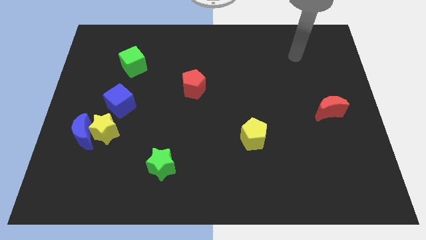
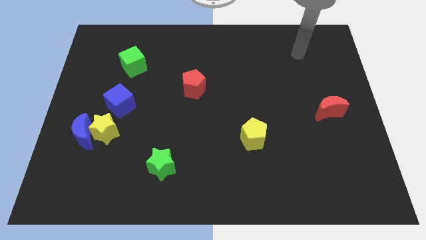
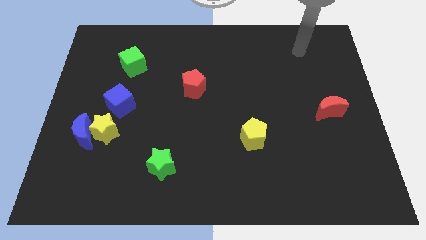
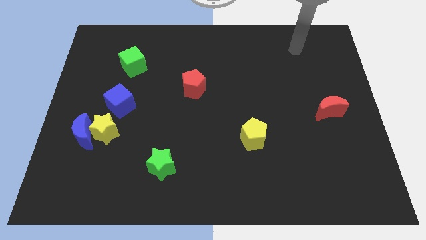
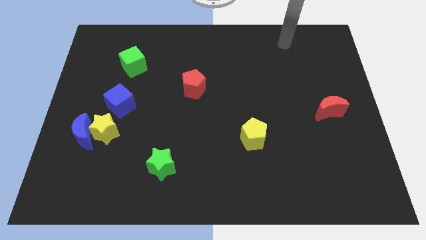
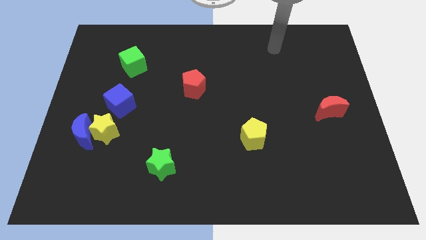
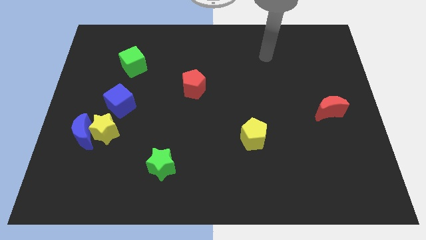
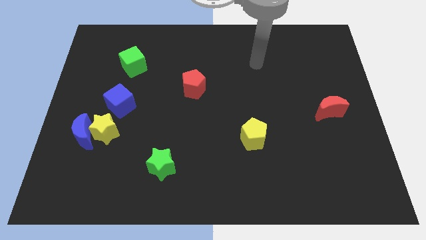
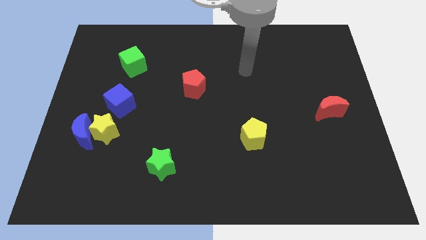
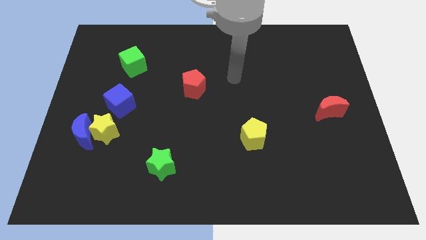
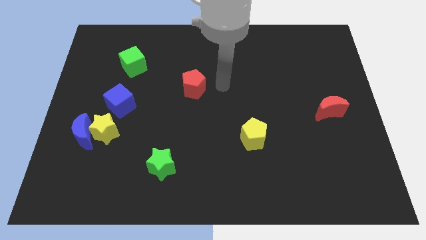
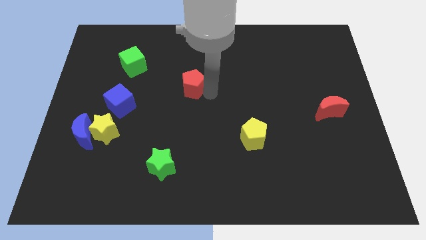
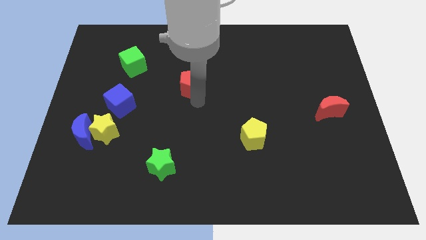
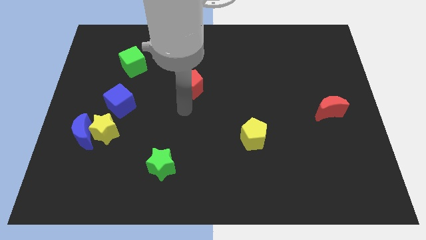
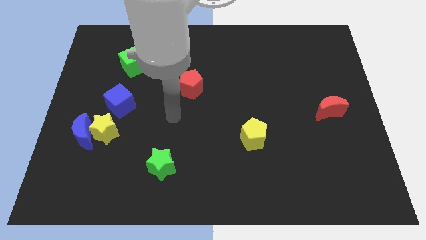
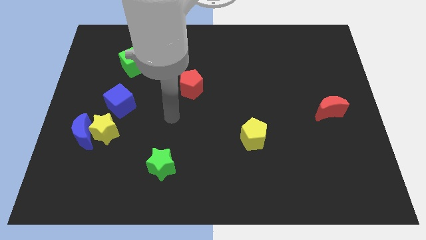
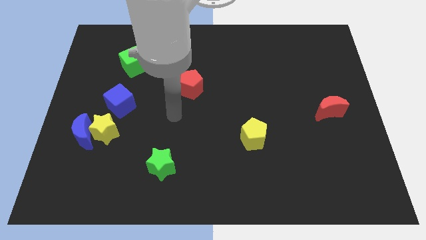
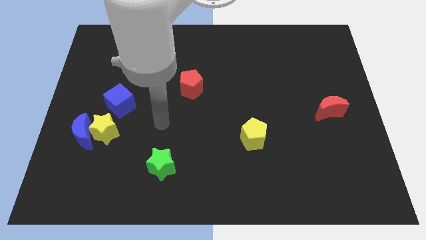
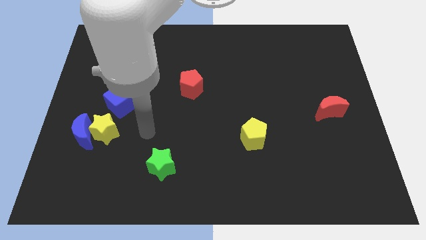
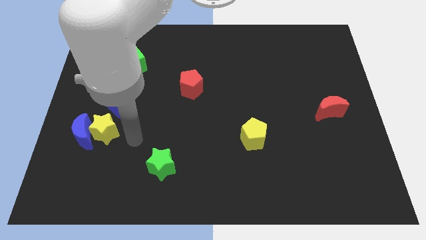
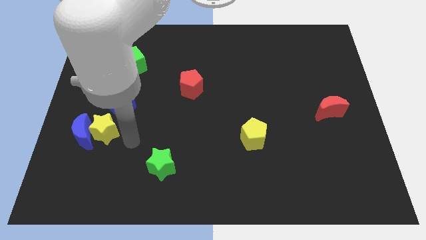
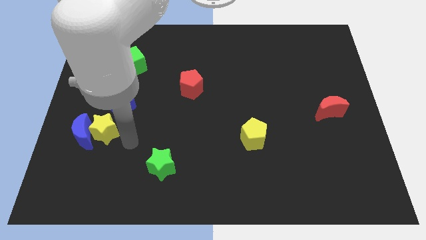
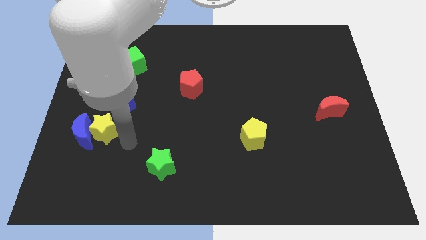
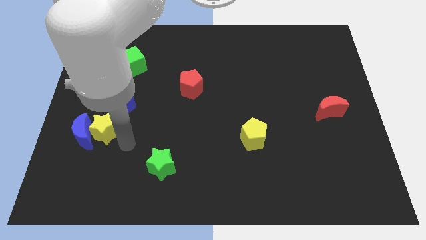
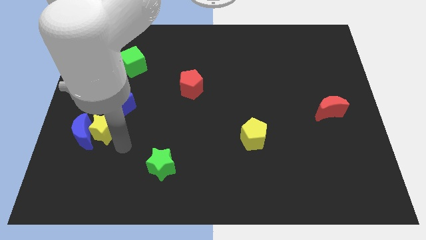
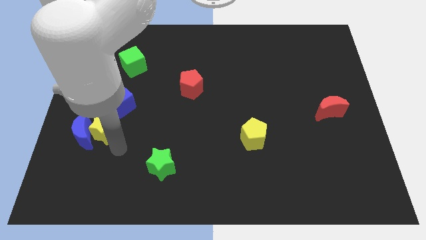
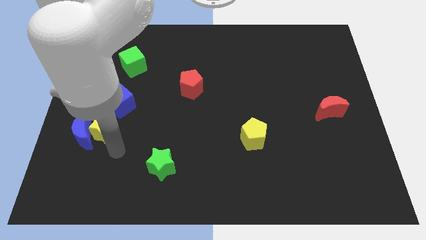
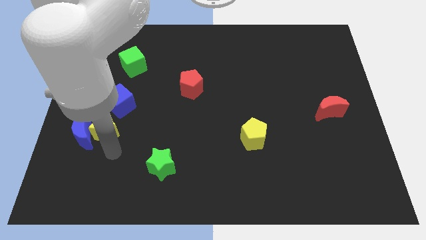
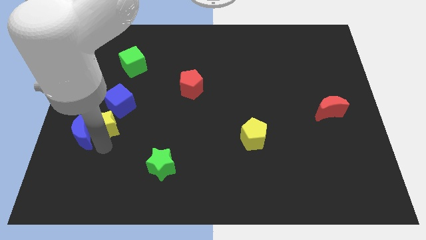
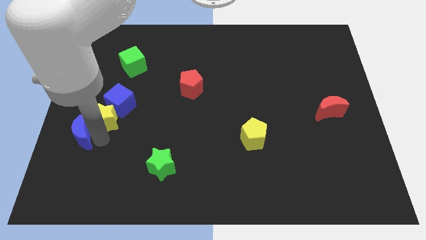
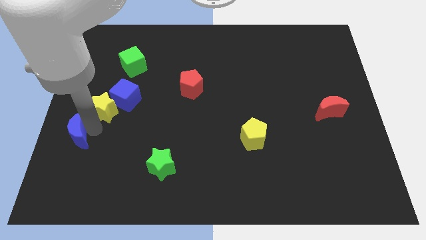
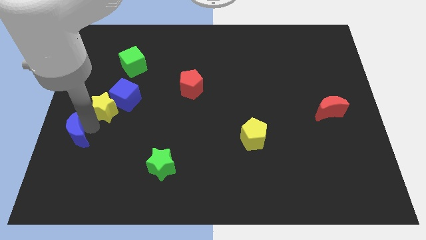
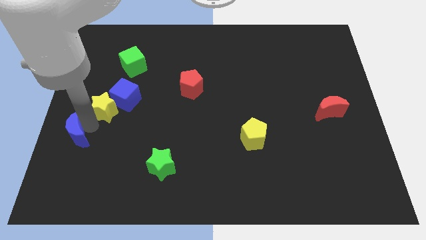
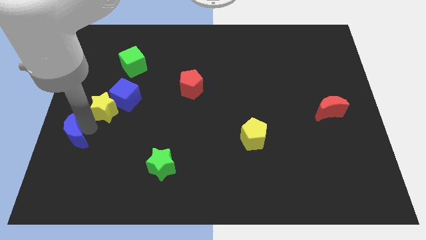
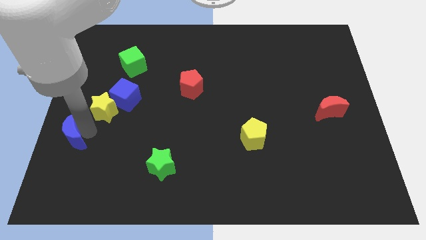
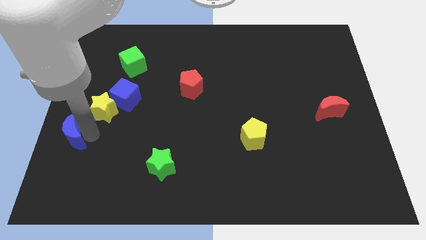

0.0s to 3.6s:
move the yellow star closer to the blue cube

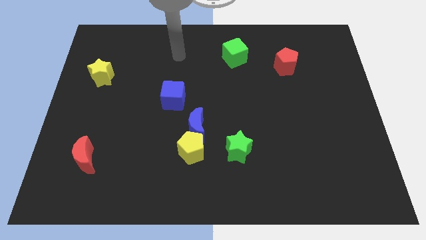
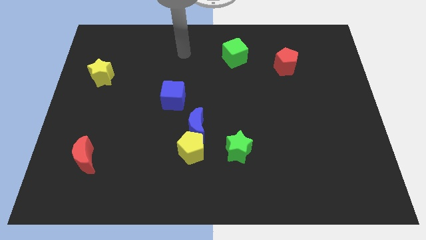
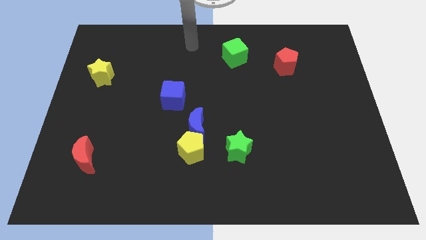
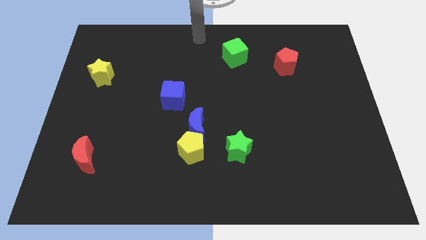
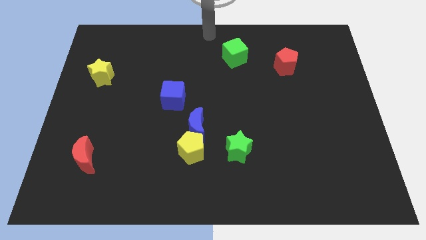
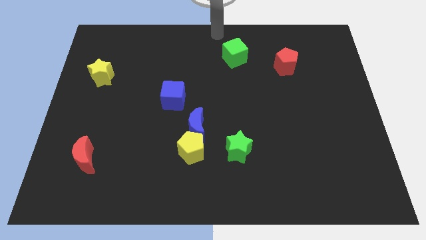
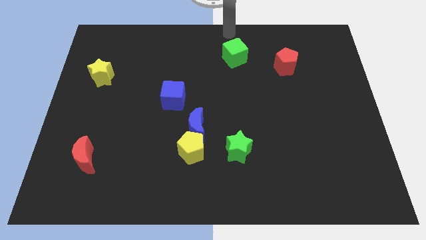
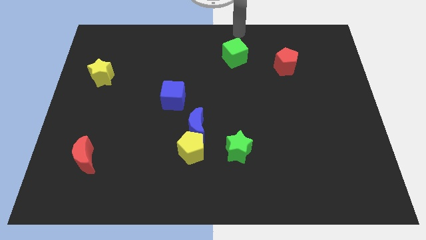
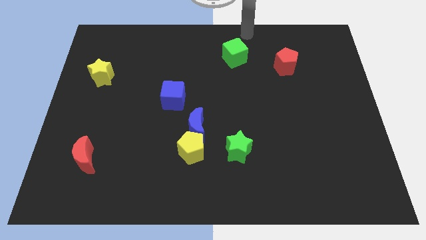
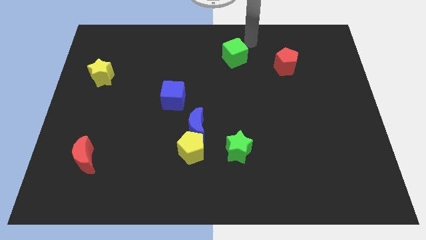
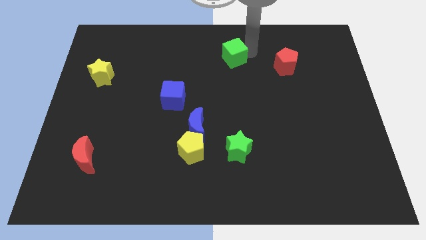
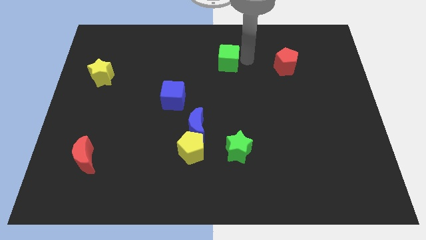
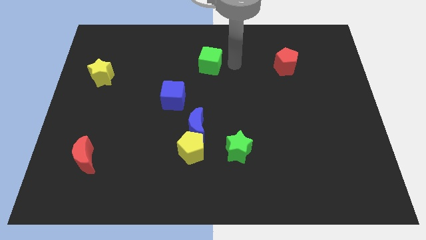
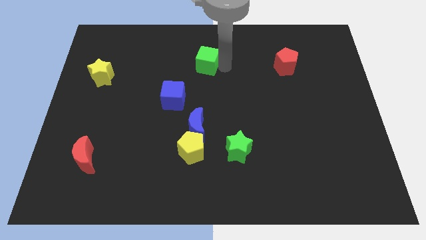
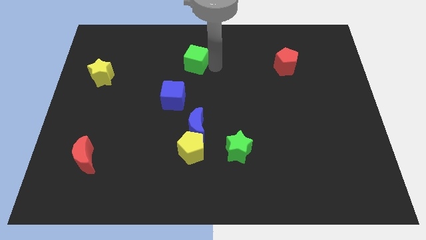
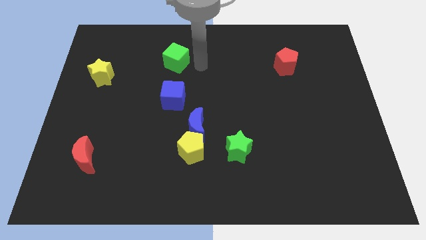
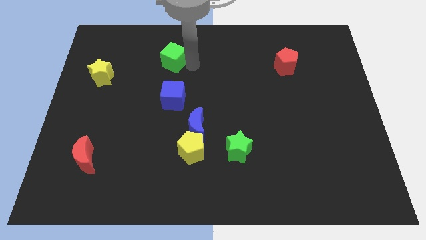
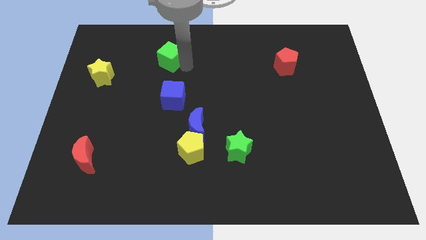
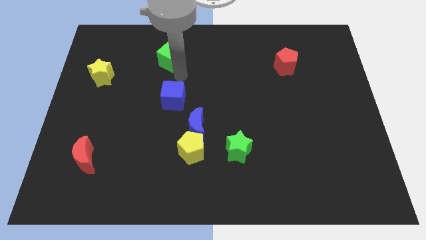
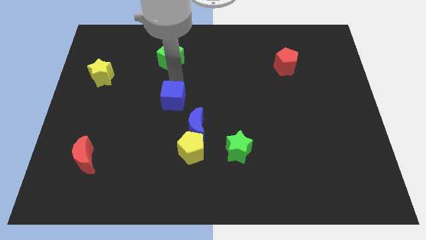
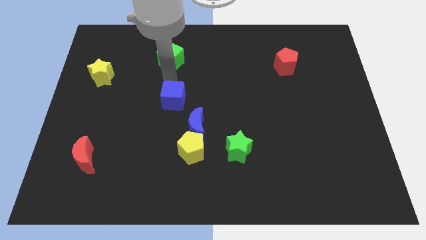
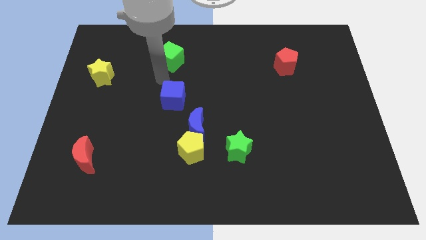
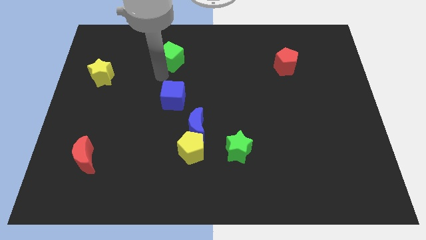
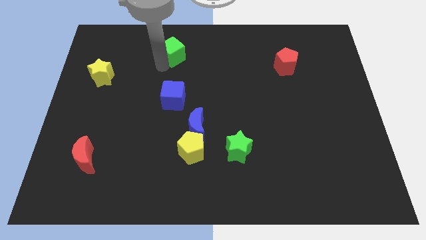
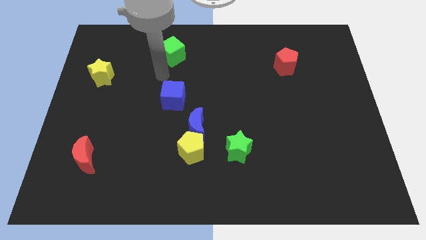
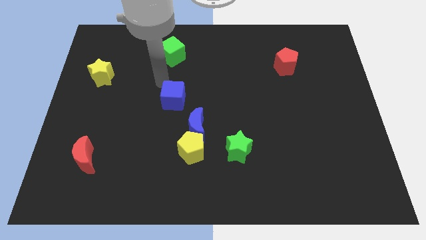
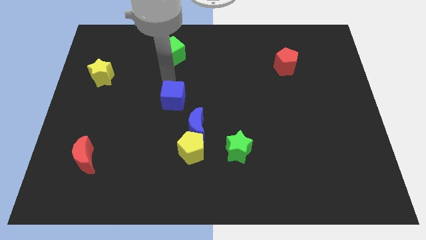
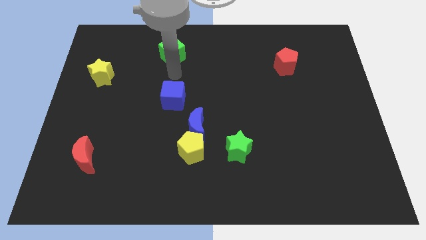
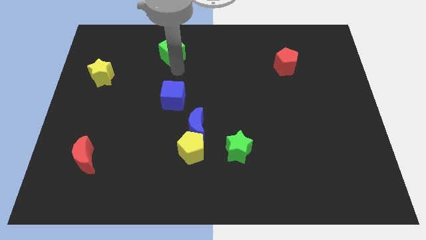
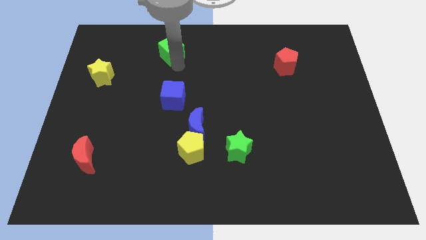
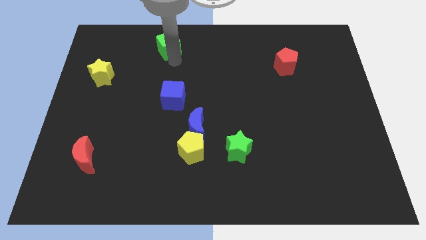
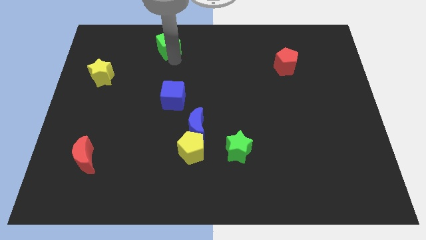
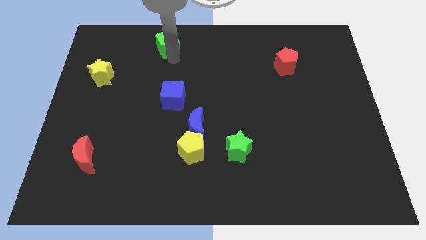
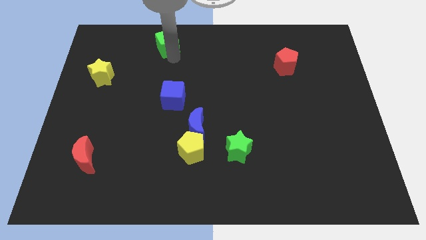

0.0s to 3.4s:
push the green cube slightly to the top side of the board

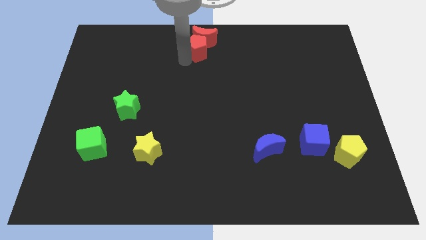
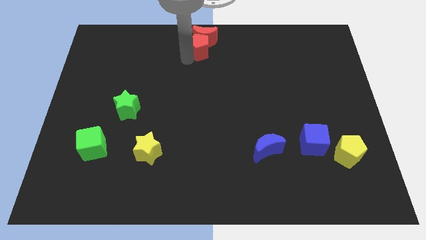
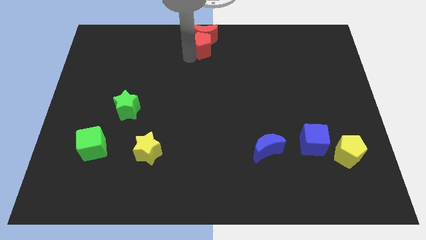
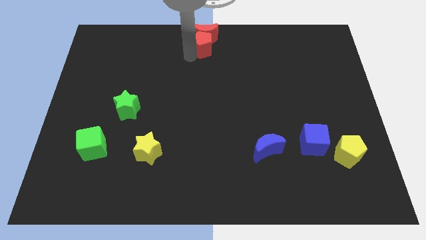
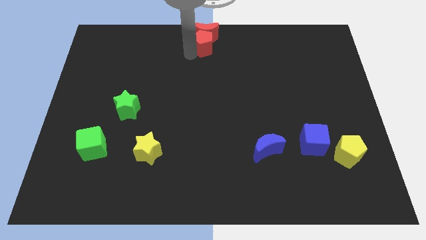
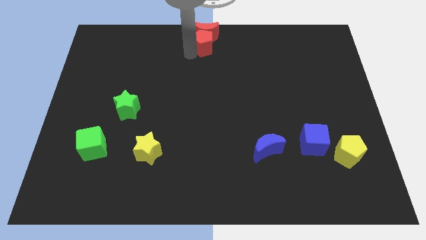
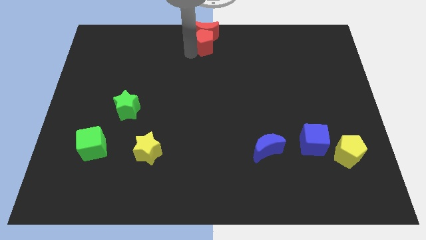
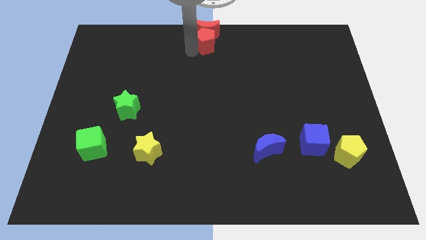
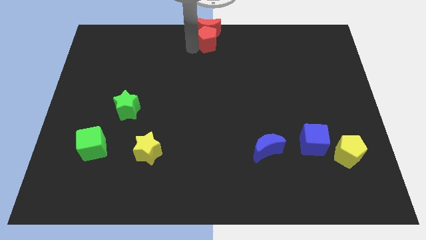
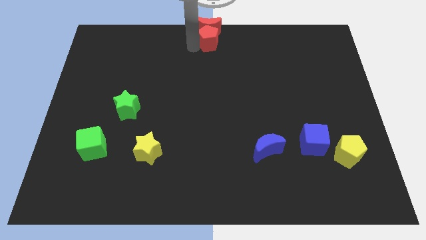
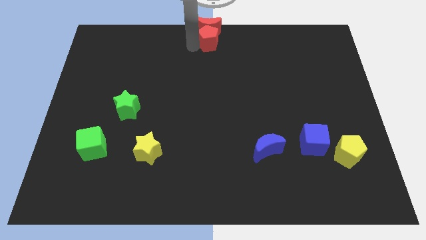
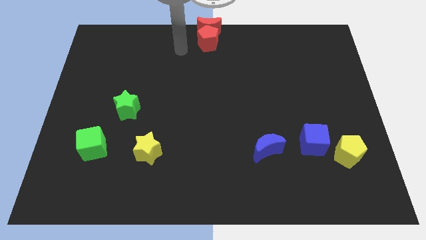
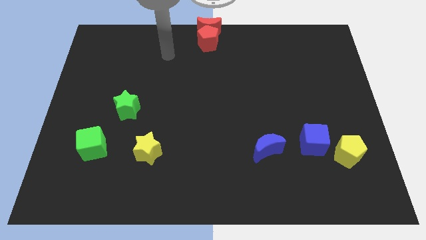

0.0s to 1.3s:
move red blocks to center top

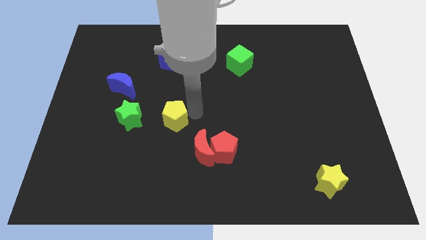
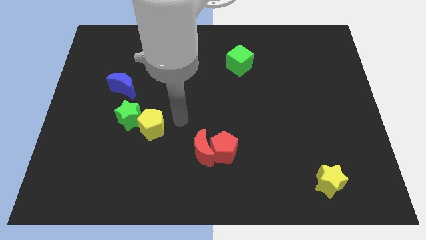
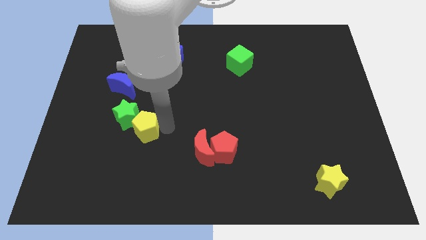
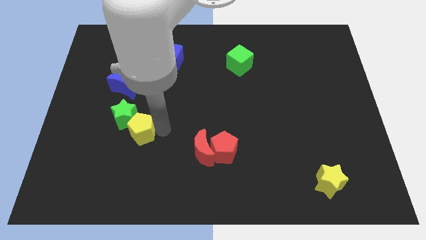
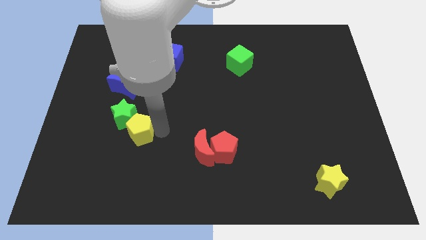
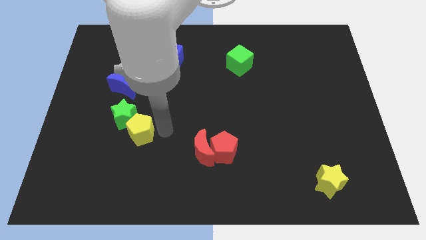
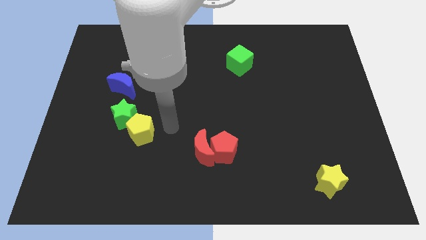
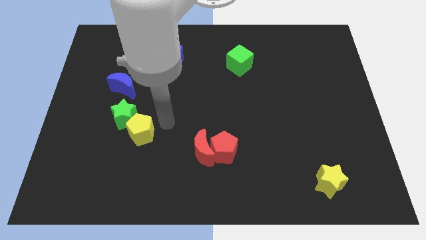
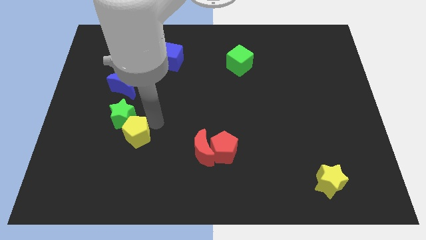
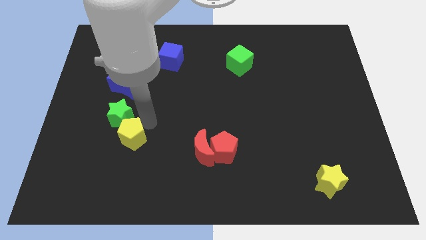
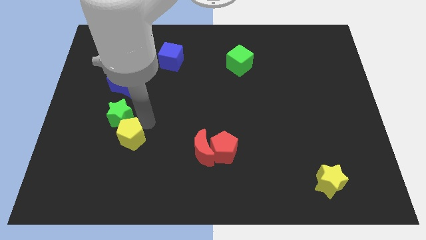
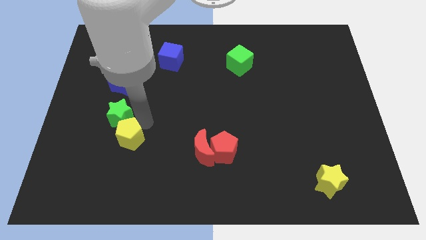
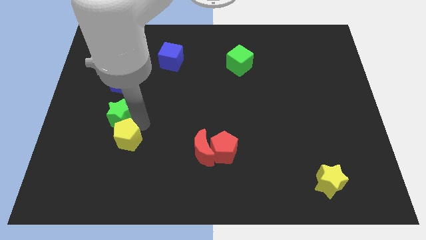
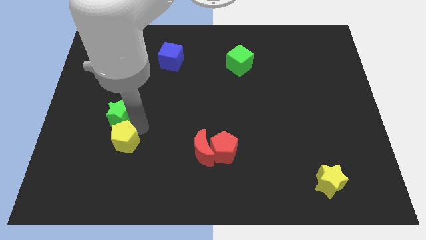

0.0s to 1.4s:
push the yellow pentagon into the green star
